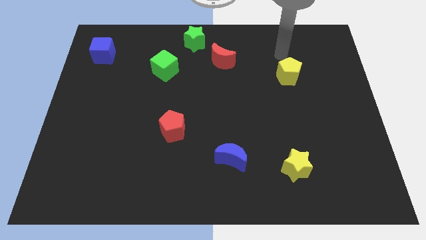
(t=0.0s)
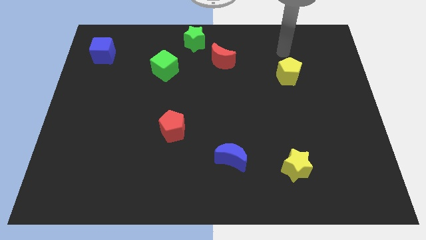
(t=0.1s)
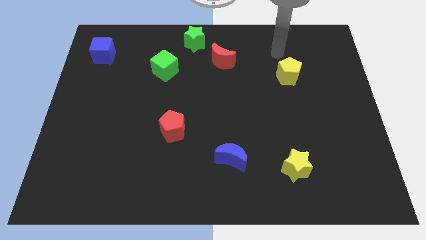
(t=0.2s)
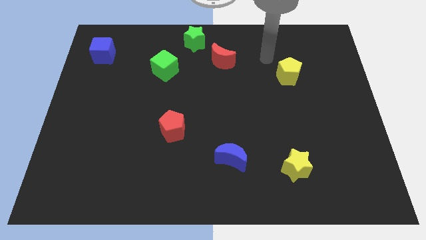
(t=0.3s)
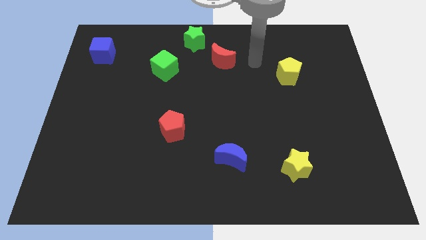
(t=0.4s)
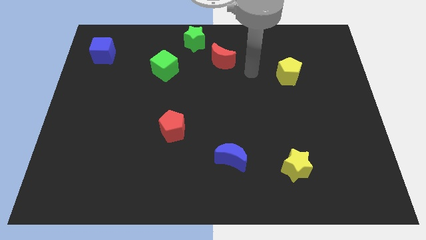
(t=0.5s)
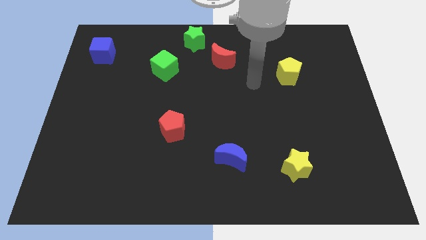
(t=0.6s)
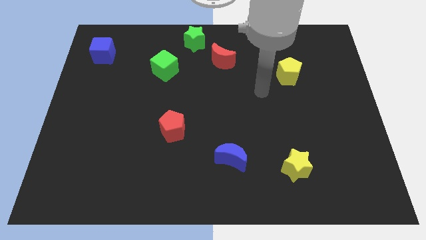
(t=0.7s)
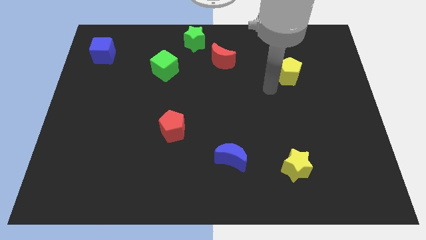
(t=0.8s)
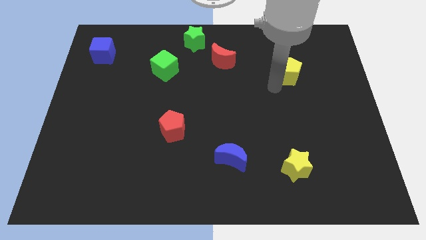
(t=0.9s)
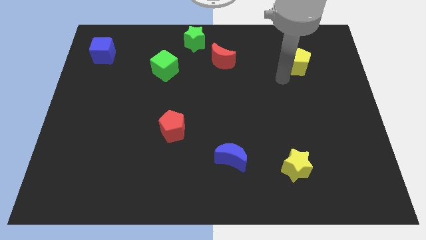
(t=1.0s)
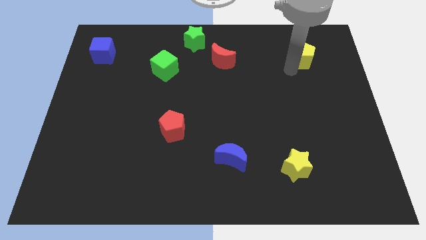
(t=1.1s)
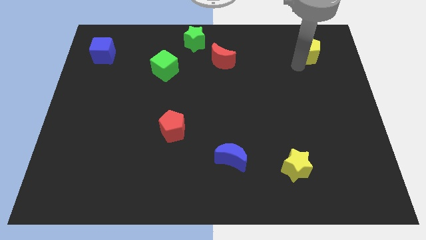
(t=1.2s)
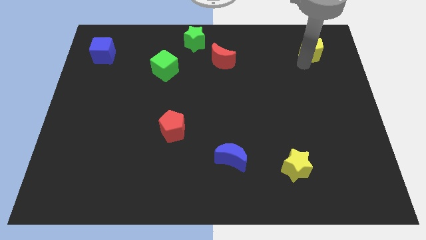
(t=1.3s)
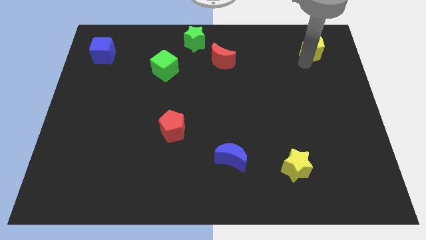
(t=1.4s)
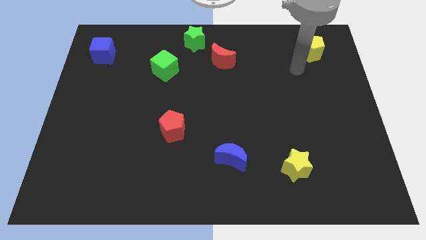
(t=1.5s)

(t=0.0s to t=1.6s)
push the yellow pentagon to the top right of the board

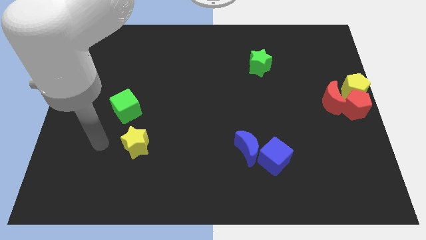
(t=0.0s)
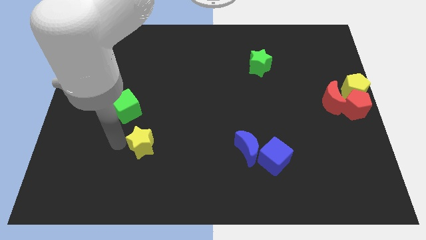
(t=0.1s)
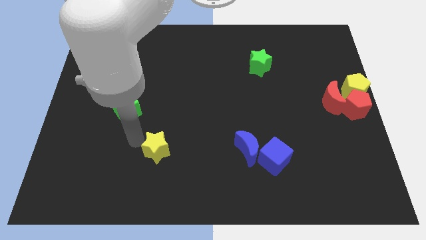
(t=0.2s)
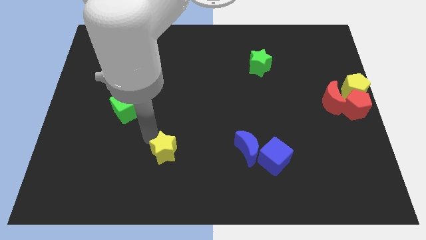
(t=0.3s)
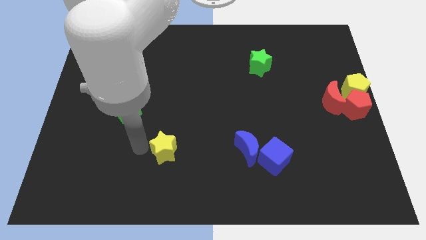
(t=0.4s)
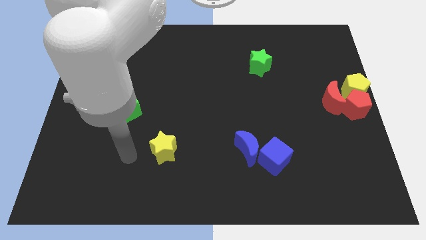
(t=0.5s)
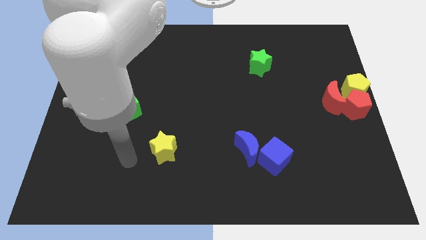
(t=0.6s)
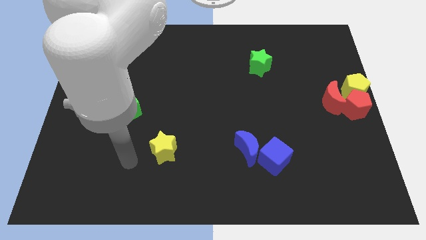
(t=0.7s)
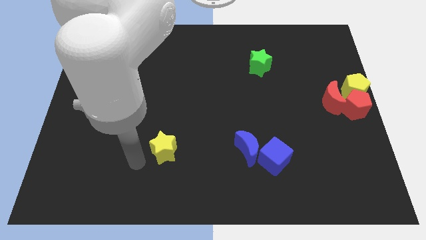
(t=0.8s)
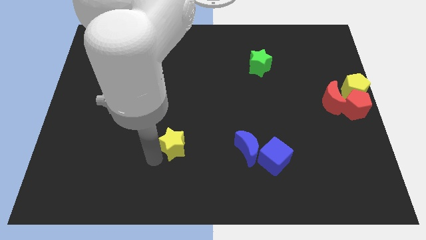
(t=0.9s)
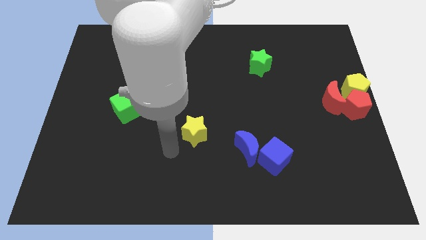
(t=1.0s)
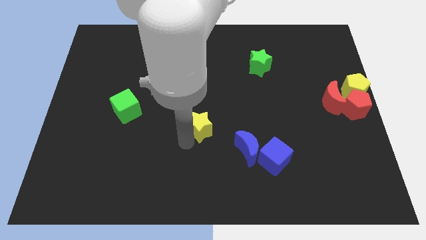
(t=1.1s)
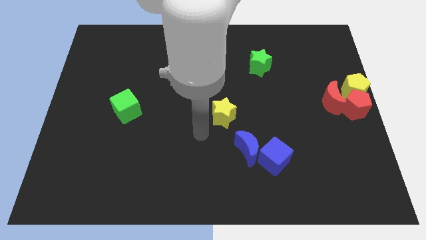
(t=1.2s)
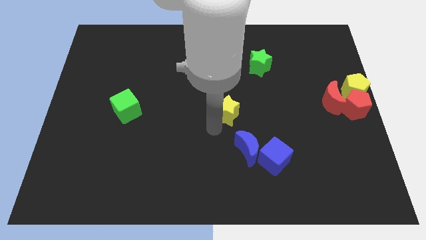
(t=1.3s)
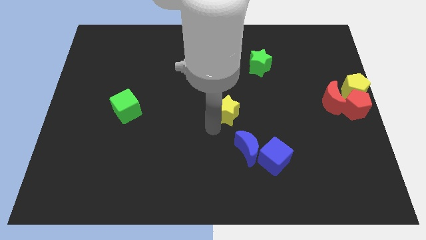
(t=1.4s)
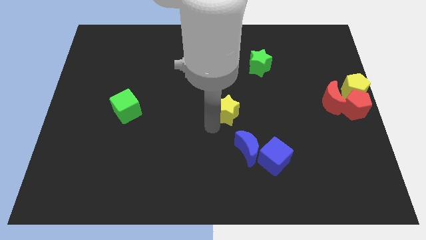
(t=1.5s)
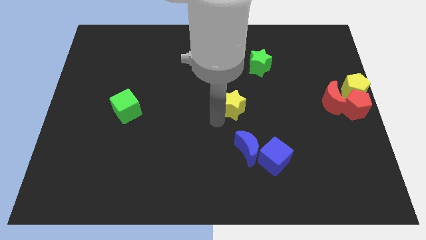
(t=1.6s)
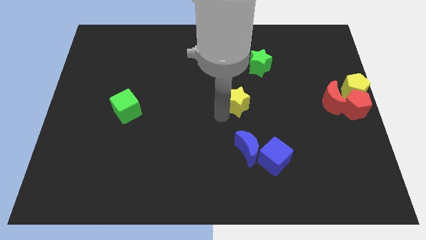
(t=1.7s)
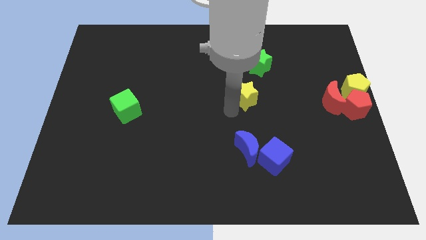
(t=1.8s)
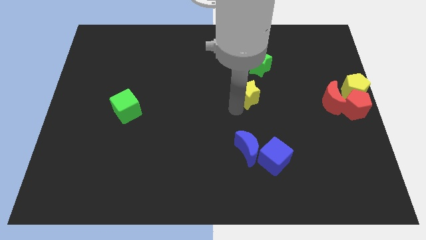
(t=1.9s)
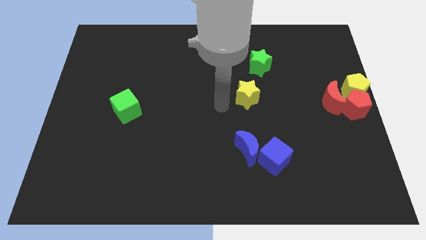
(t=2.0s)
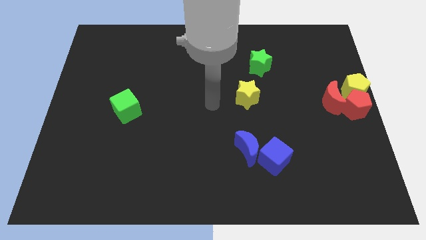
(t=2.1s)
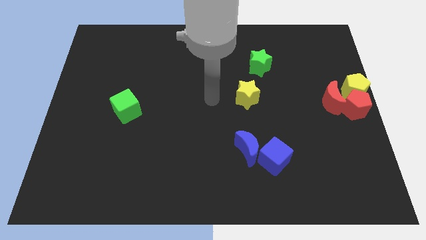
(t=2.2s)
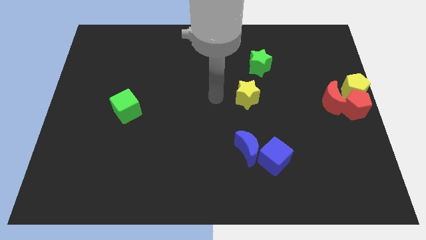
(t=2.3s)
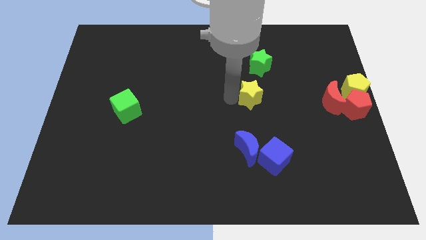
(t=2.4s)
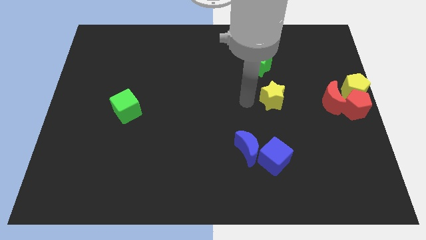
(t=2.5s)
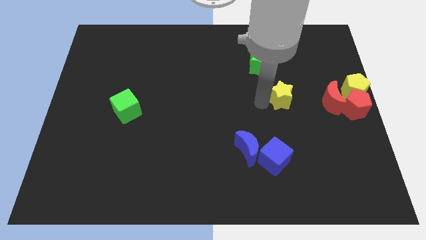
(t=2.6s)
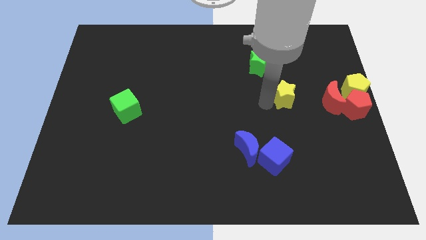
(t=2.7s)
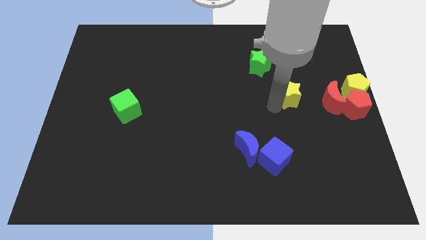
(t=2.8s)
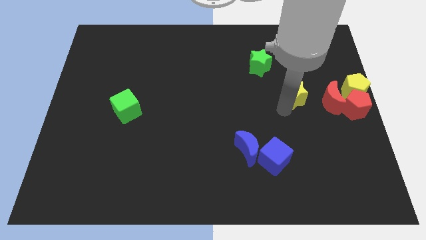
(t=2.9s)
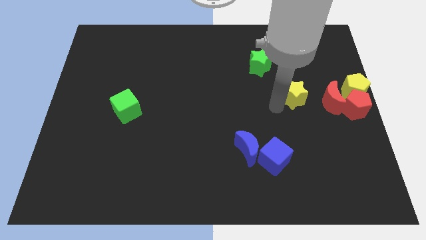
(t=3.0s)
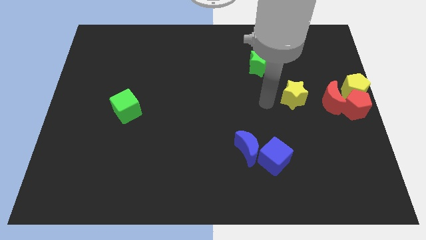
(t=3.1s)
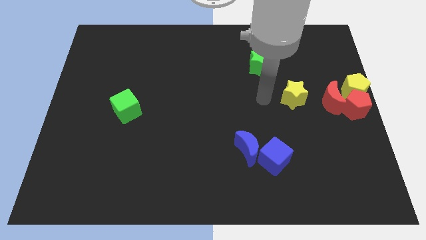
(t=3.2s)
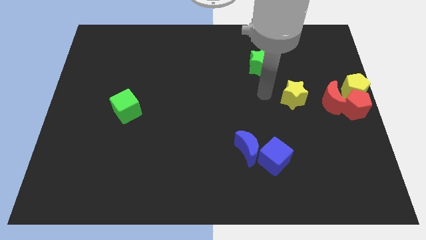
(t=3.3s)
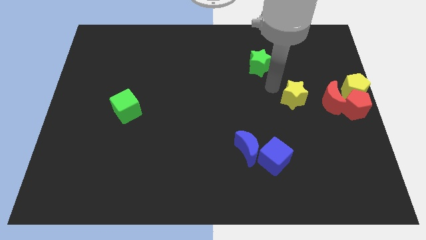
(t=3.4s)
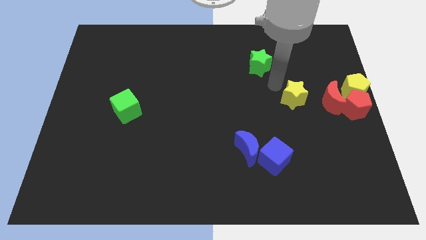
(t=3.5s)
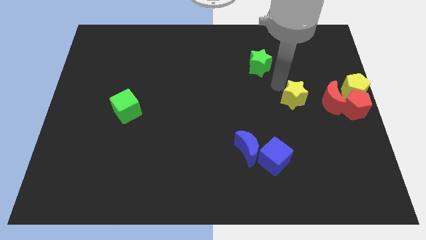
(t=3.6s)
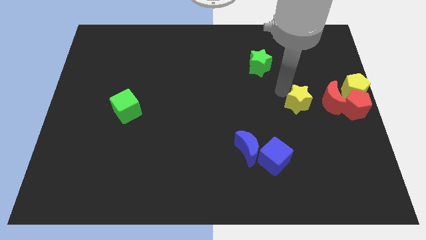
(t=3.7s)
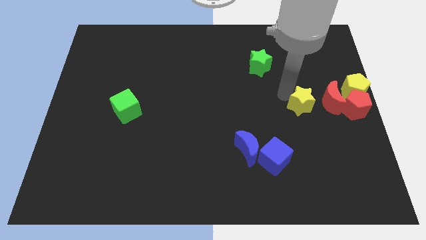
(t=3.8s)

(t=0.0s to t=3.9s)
place the yellow star to the left of the red moon

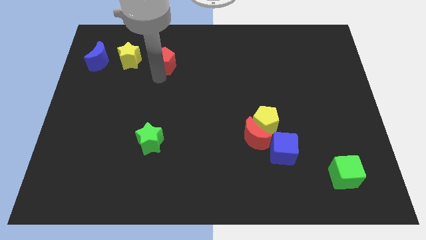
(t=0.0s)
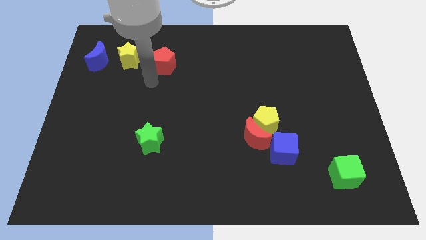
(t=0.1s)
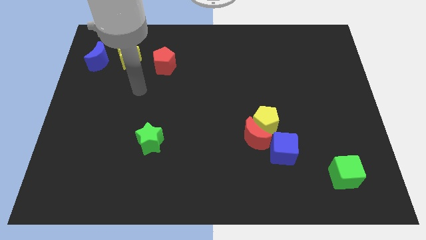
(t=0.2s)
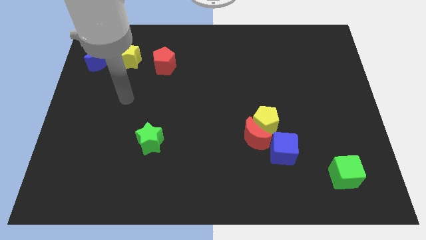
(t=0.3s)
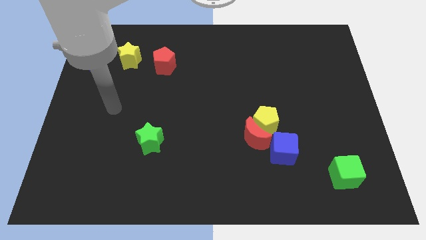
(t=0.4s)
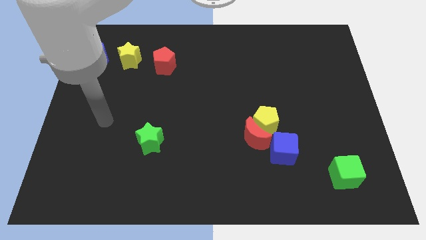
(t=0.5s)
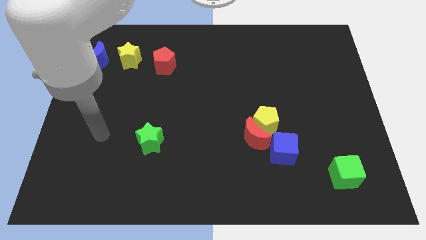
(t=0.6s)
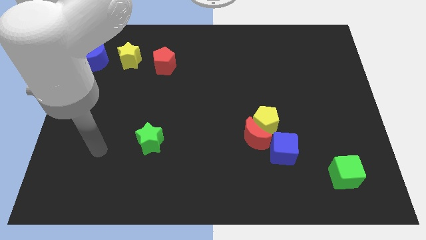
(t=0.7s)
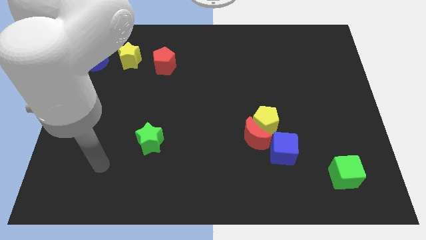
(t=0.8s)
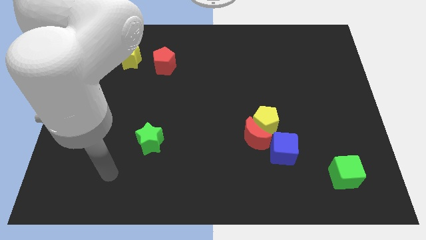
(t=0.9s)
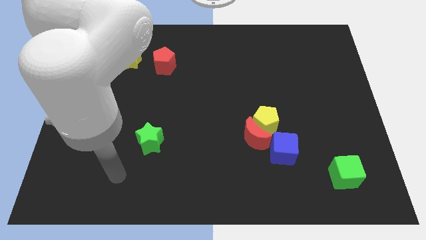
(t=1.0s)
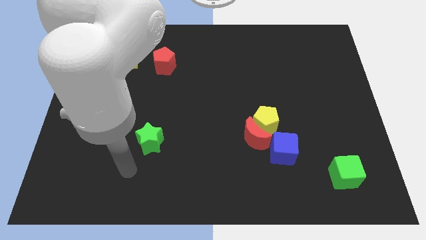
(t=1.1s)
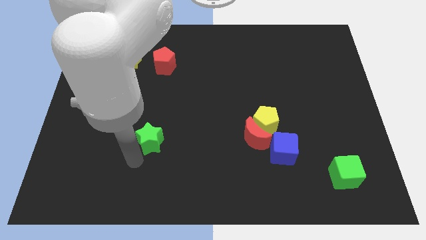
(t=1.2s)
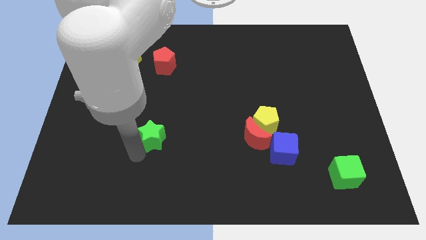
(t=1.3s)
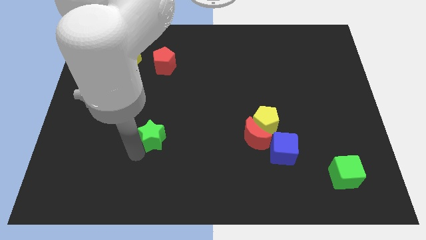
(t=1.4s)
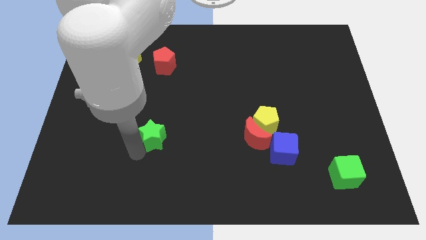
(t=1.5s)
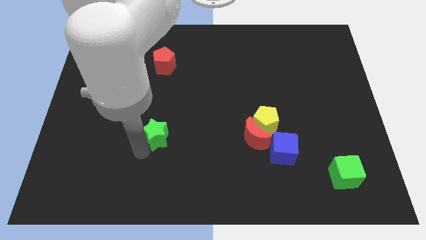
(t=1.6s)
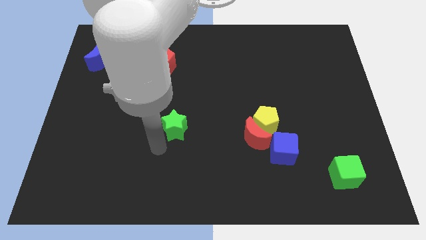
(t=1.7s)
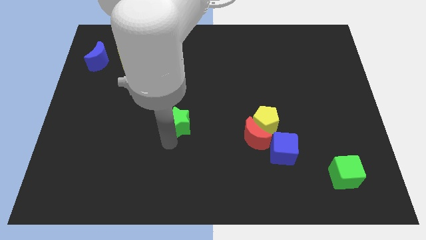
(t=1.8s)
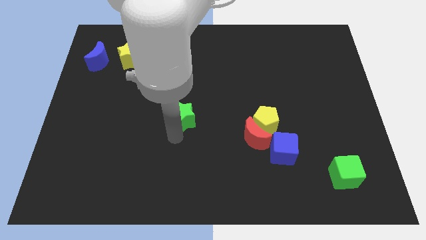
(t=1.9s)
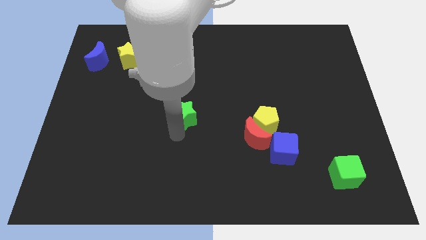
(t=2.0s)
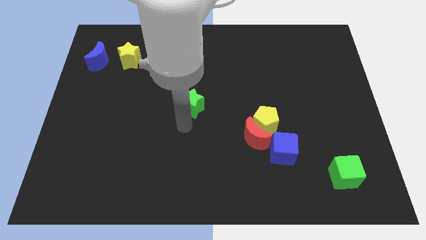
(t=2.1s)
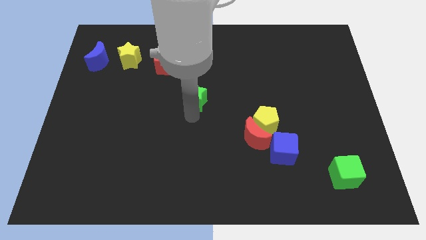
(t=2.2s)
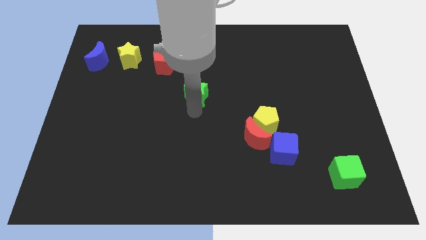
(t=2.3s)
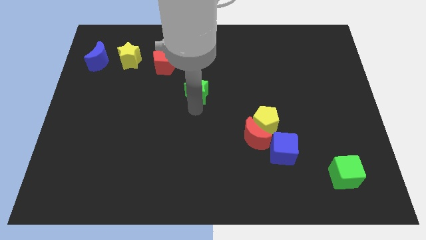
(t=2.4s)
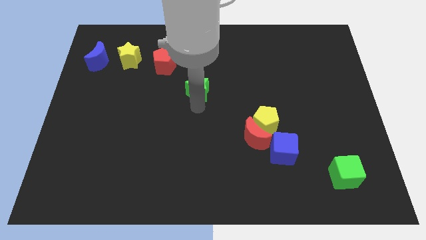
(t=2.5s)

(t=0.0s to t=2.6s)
move green star diagonally in between red blocks

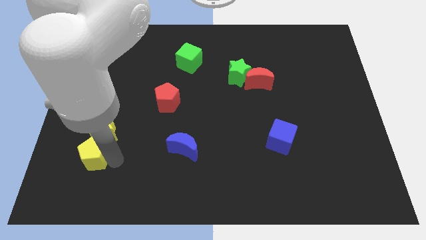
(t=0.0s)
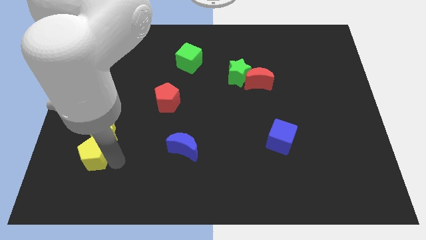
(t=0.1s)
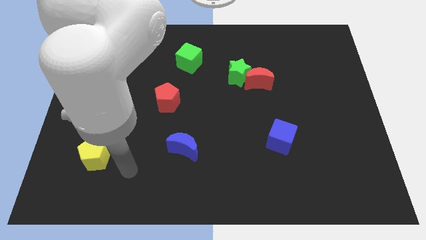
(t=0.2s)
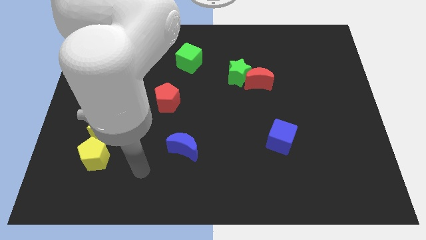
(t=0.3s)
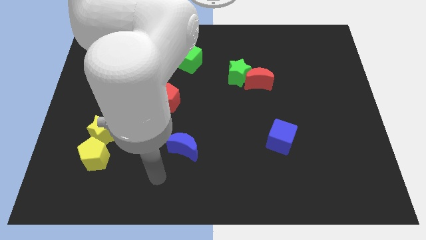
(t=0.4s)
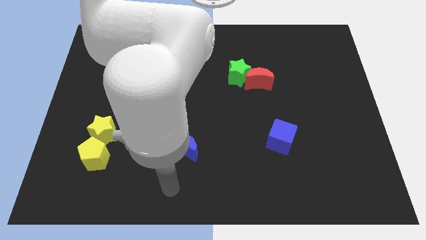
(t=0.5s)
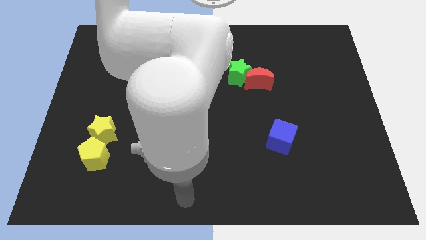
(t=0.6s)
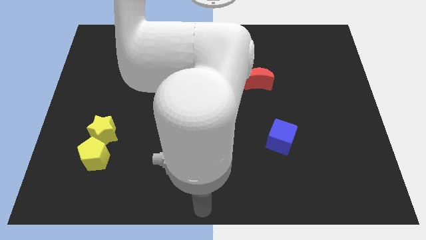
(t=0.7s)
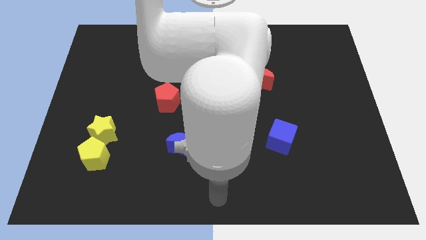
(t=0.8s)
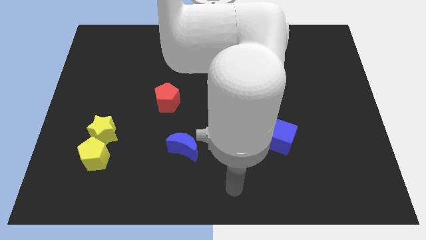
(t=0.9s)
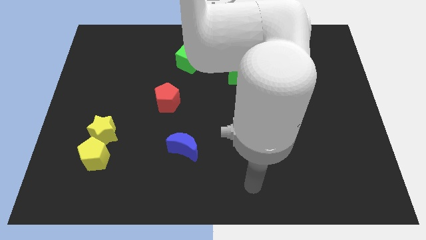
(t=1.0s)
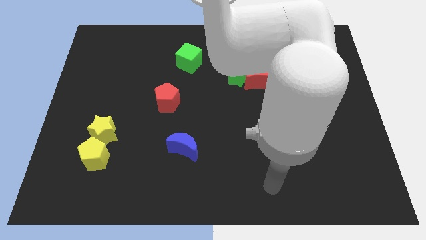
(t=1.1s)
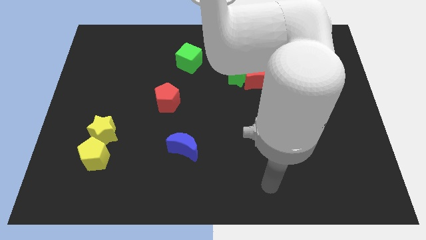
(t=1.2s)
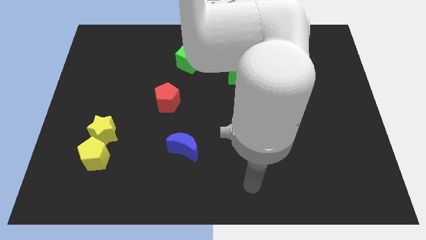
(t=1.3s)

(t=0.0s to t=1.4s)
move your arm away from the yellow pentagon
